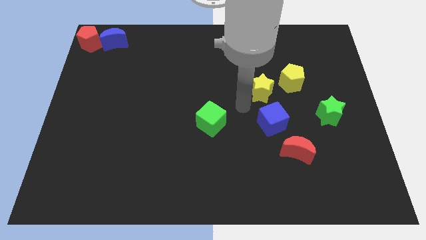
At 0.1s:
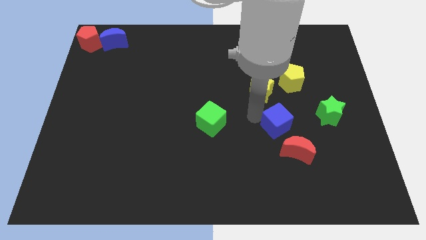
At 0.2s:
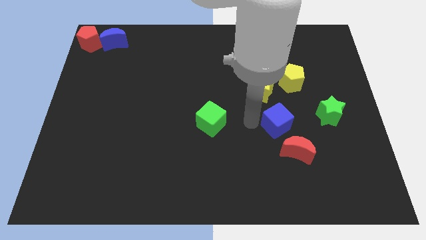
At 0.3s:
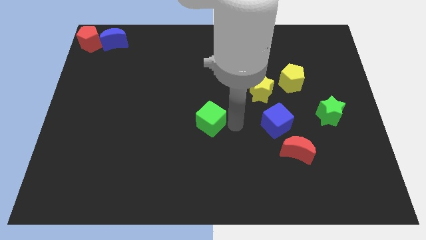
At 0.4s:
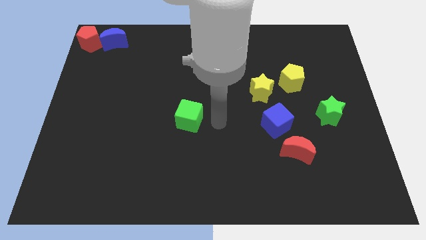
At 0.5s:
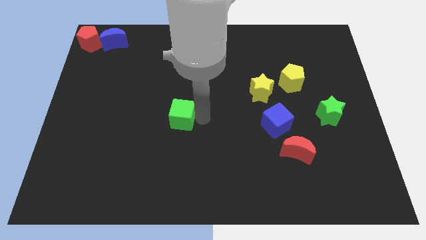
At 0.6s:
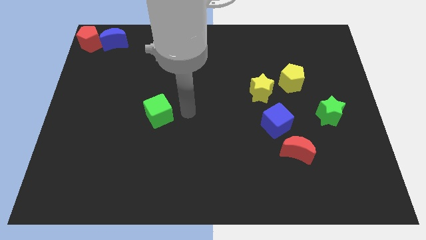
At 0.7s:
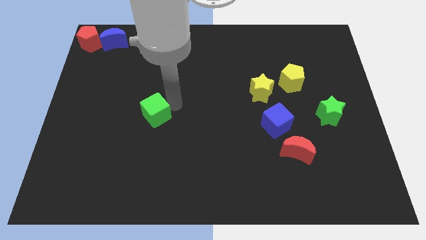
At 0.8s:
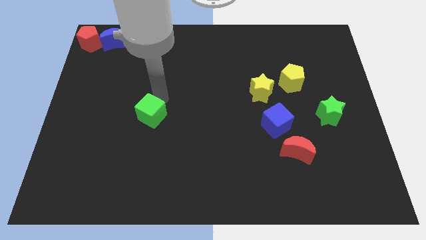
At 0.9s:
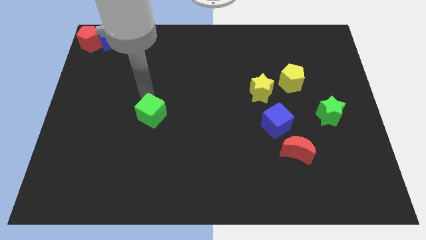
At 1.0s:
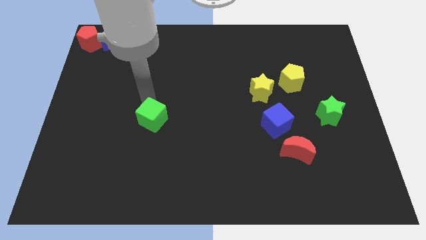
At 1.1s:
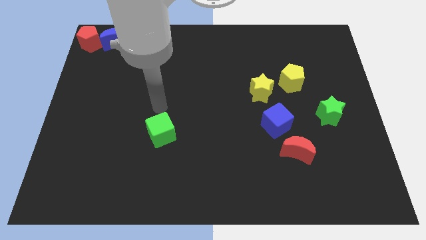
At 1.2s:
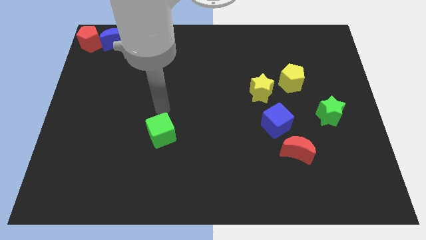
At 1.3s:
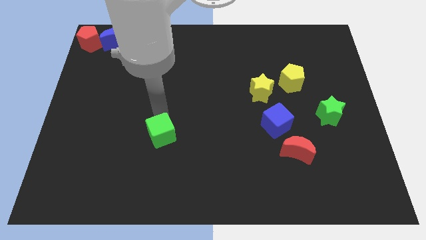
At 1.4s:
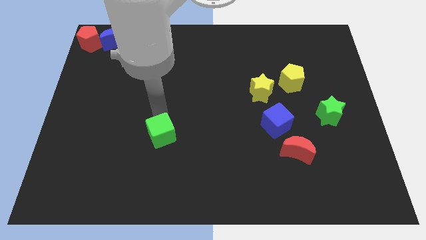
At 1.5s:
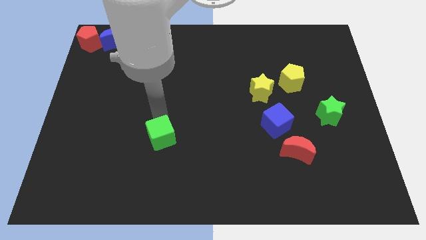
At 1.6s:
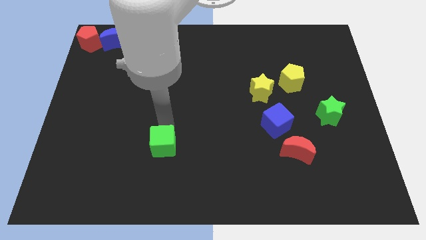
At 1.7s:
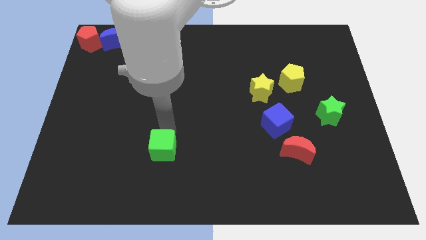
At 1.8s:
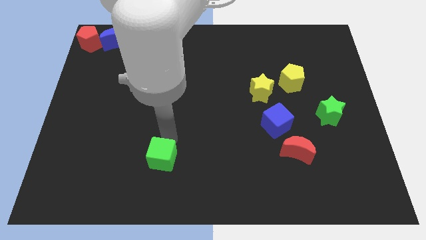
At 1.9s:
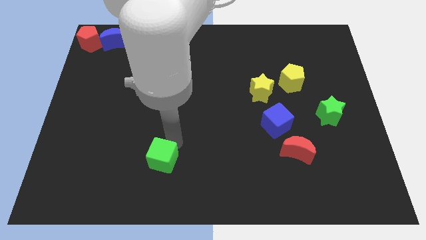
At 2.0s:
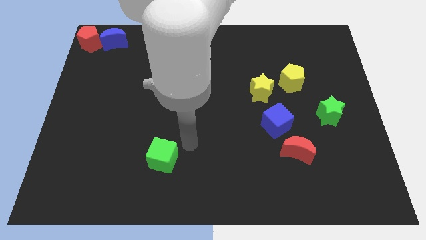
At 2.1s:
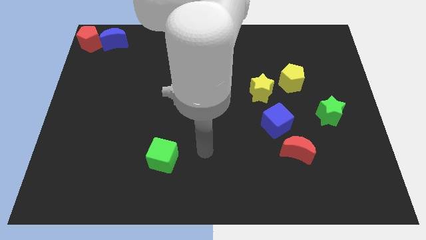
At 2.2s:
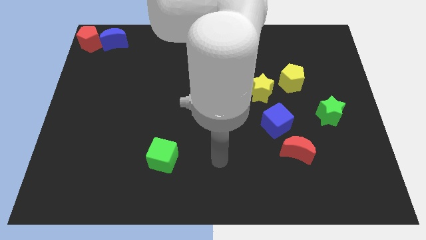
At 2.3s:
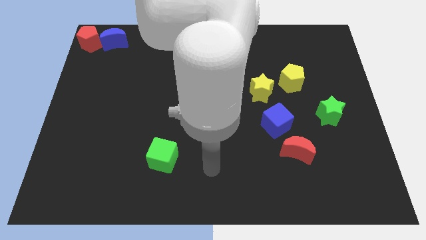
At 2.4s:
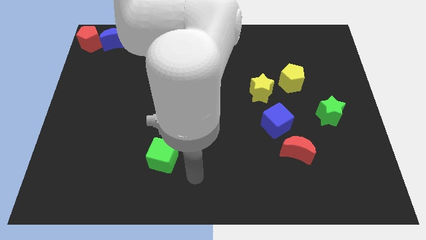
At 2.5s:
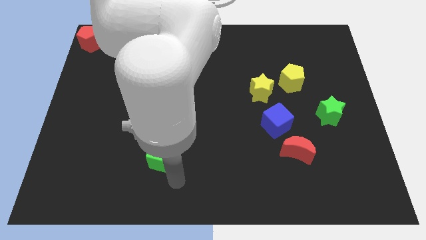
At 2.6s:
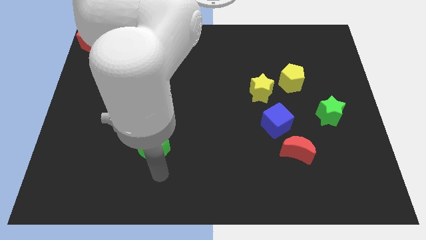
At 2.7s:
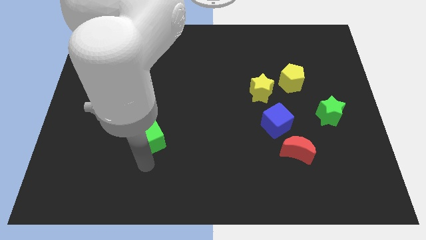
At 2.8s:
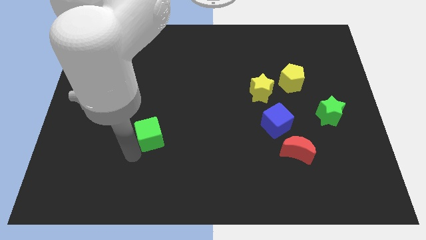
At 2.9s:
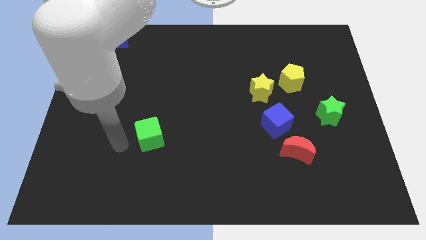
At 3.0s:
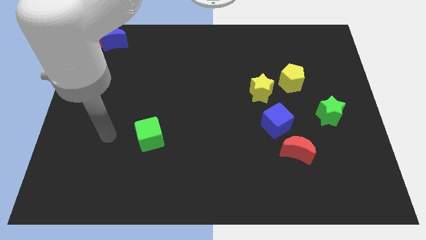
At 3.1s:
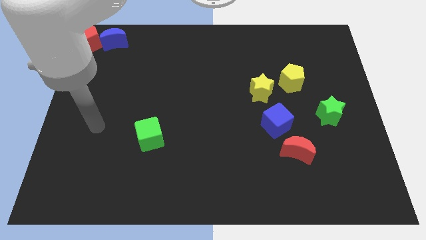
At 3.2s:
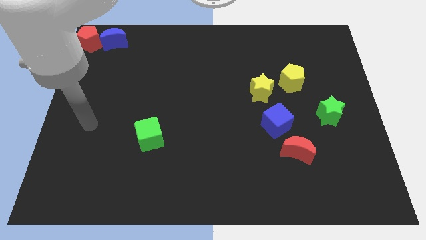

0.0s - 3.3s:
move the green cube slightly towards the bottom left

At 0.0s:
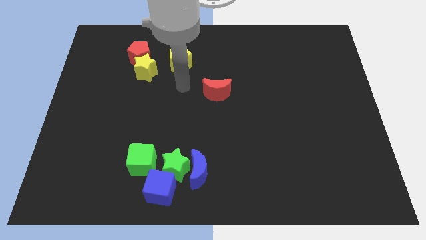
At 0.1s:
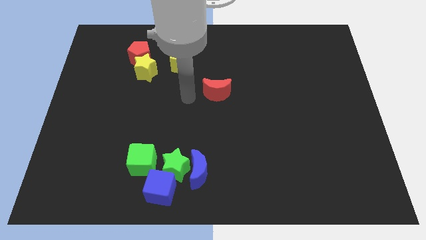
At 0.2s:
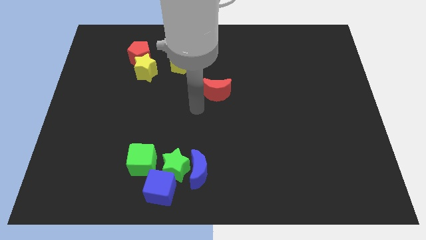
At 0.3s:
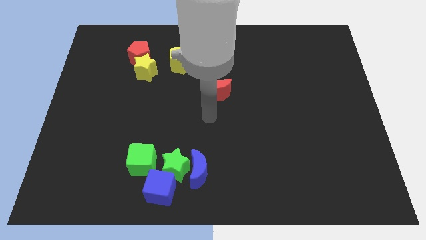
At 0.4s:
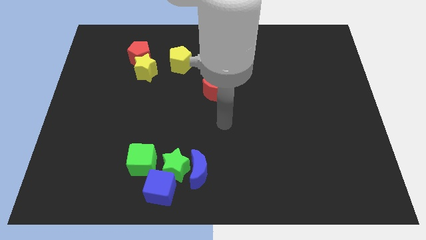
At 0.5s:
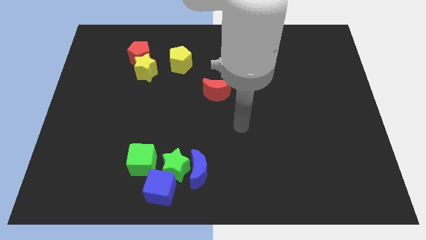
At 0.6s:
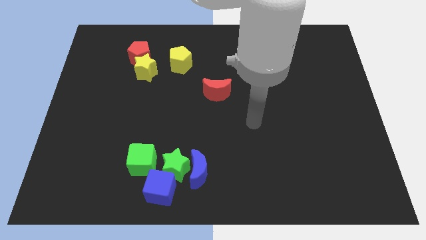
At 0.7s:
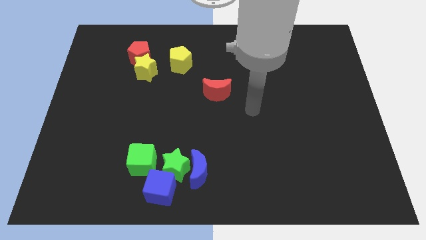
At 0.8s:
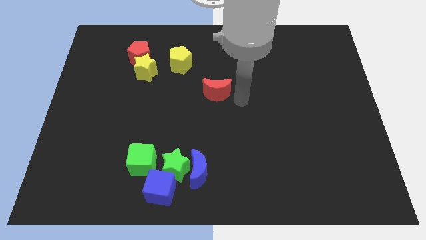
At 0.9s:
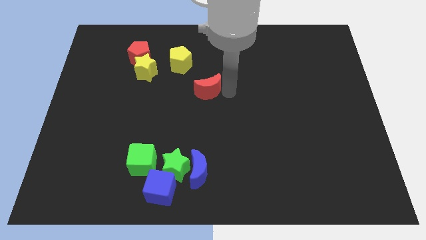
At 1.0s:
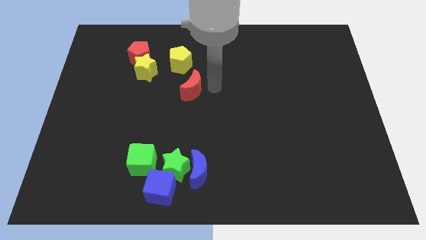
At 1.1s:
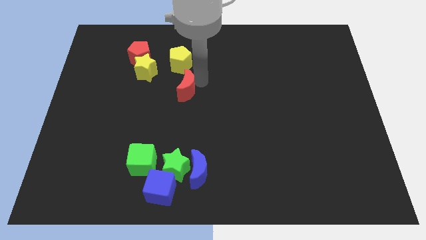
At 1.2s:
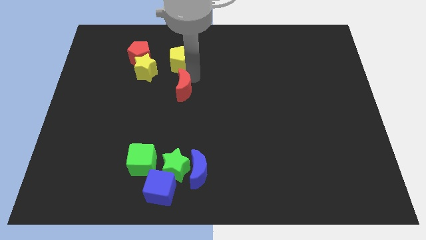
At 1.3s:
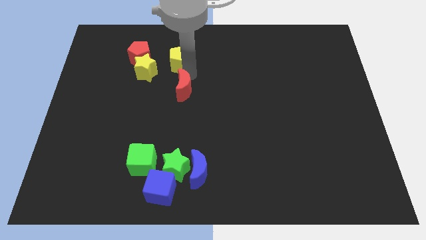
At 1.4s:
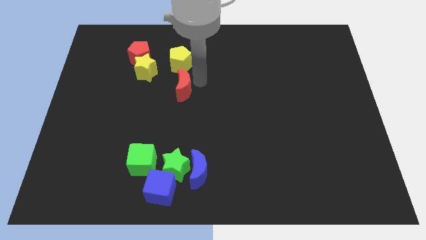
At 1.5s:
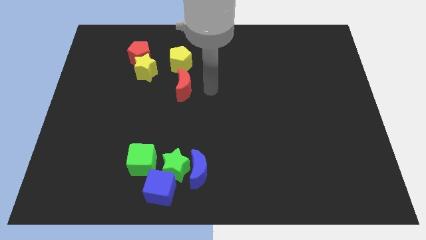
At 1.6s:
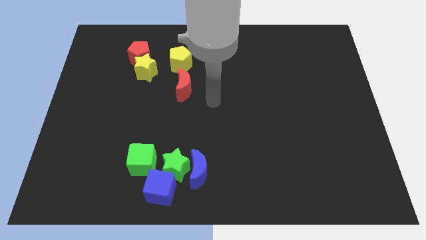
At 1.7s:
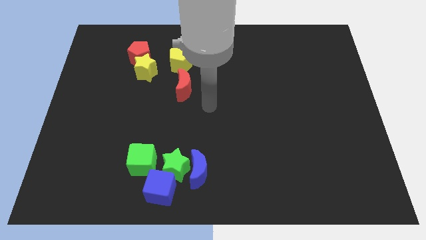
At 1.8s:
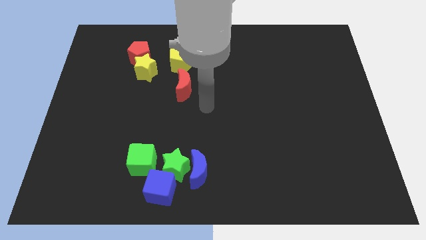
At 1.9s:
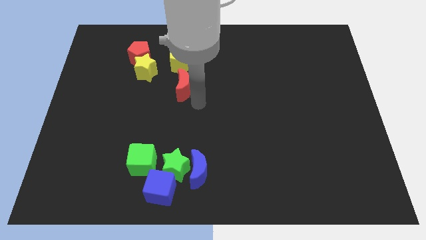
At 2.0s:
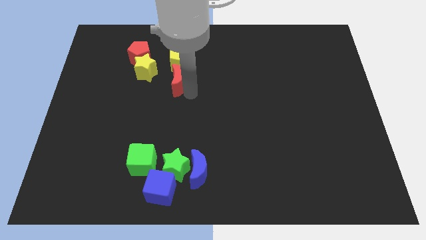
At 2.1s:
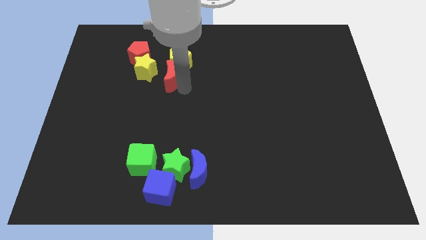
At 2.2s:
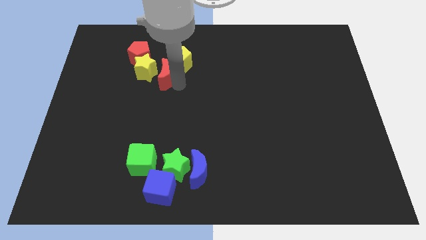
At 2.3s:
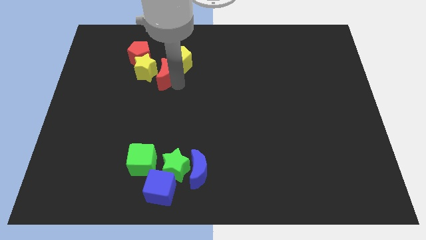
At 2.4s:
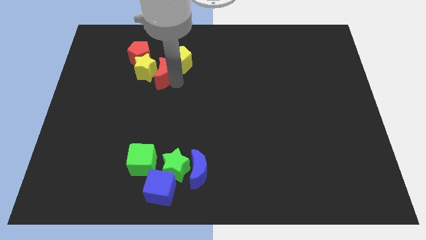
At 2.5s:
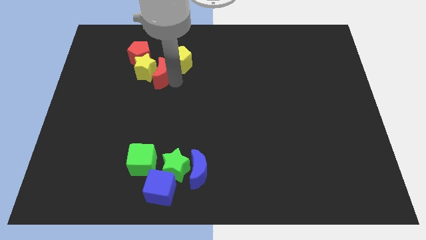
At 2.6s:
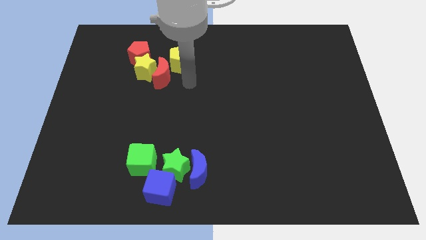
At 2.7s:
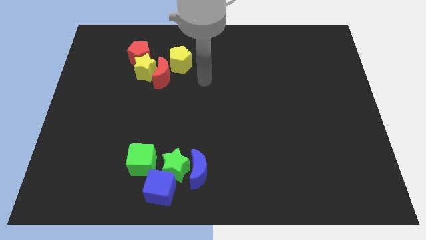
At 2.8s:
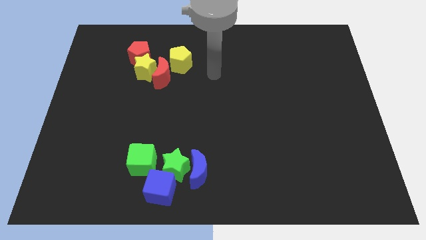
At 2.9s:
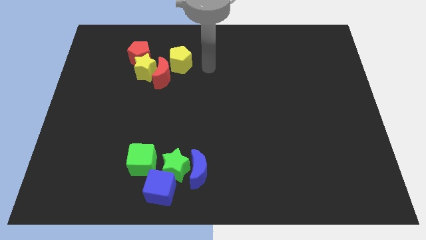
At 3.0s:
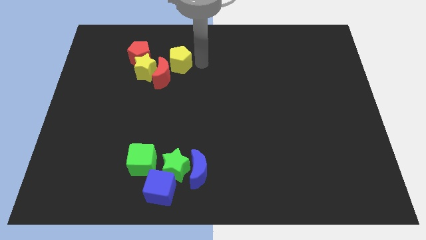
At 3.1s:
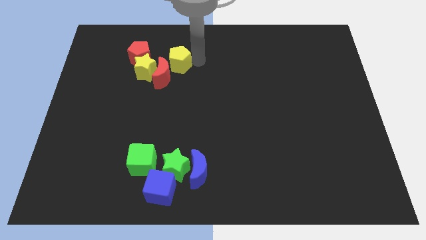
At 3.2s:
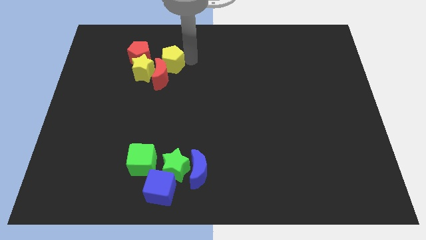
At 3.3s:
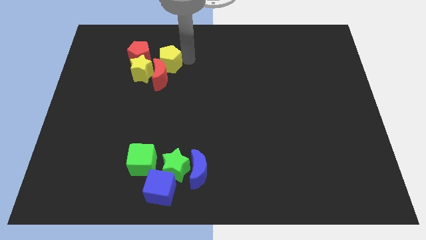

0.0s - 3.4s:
move the red crescent into the yellow star

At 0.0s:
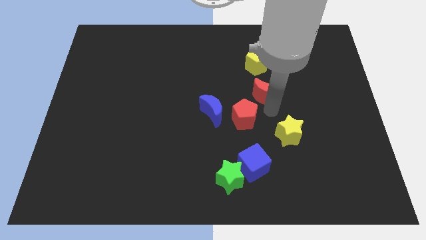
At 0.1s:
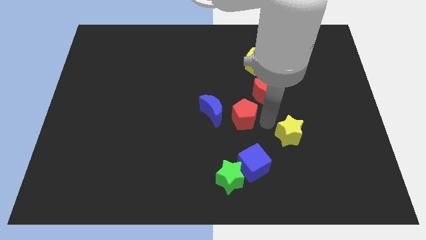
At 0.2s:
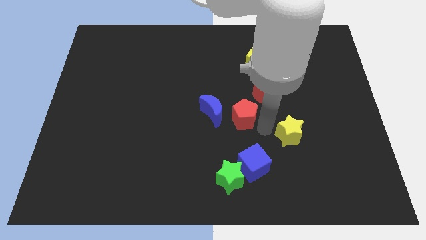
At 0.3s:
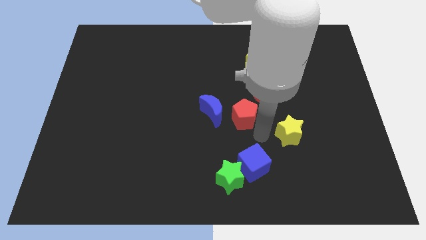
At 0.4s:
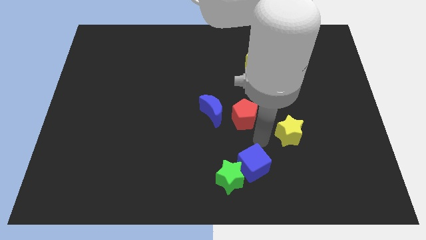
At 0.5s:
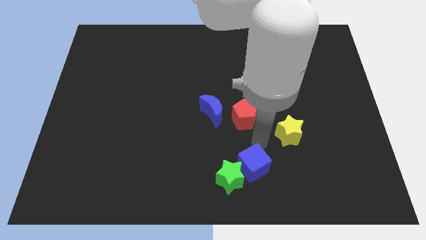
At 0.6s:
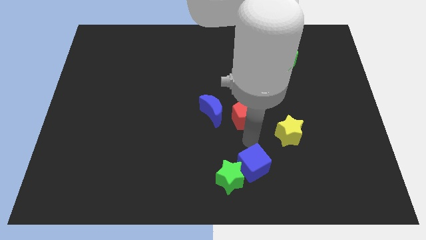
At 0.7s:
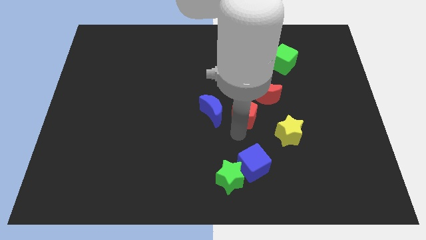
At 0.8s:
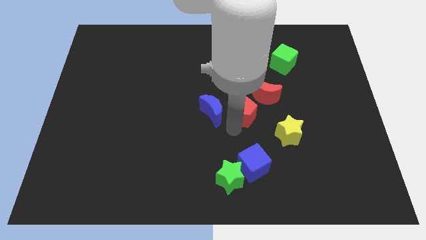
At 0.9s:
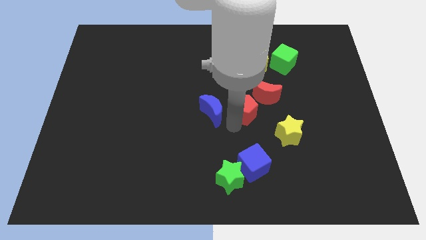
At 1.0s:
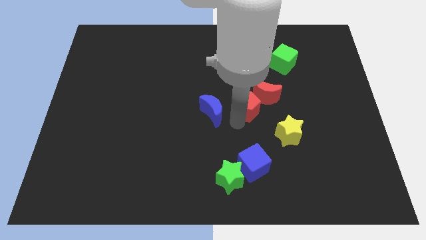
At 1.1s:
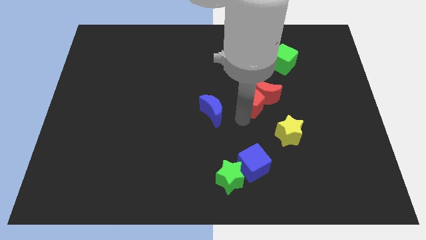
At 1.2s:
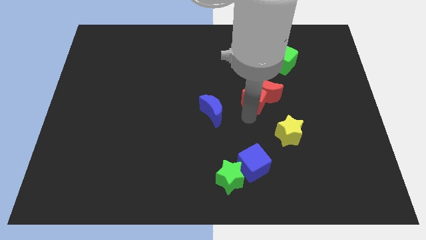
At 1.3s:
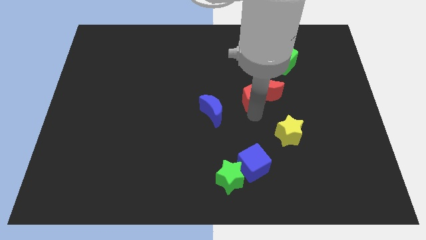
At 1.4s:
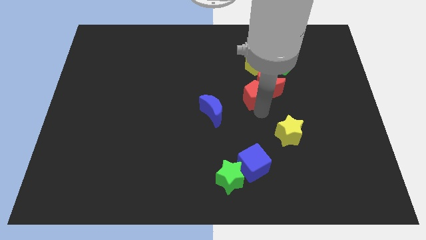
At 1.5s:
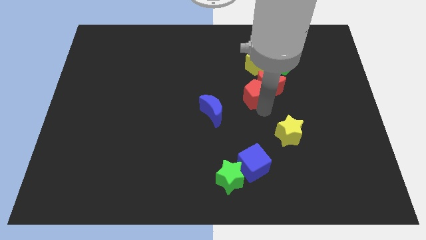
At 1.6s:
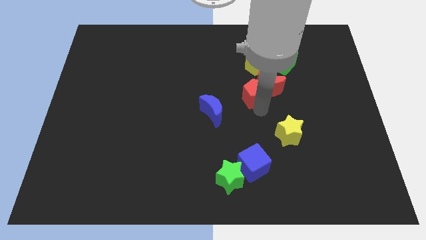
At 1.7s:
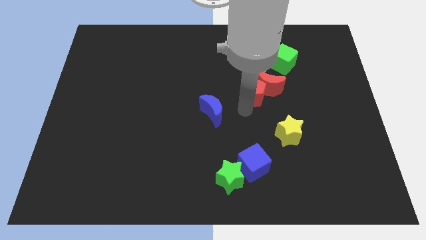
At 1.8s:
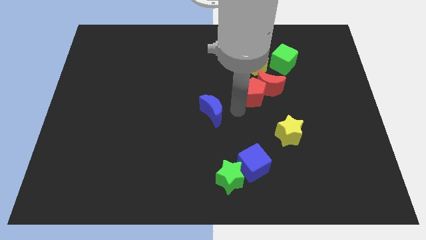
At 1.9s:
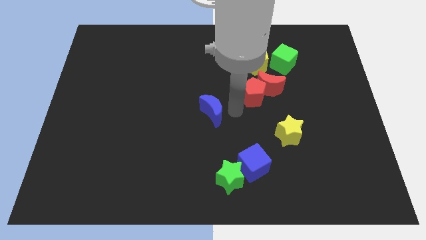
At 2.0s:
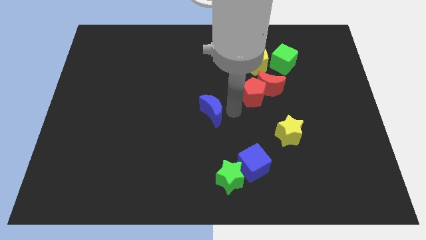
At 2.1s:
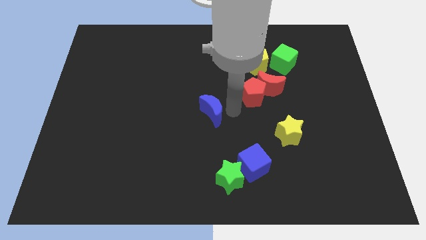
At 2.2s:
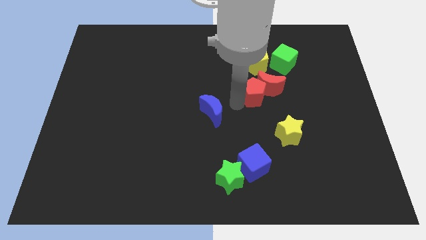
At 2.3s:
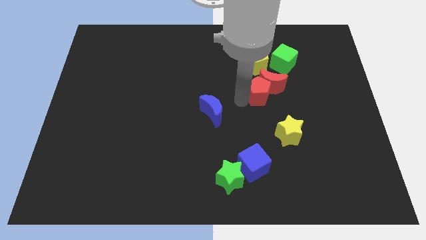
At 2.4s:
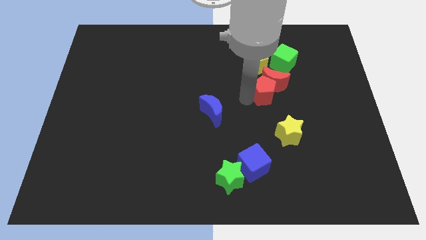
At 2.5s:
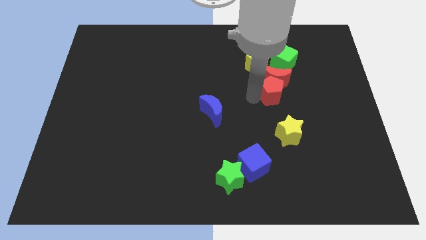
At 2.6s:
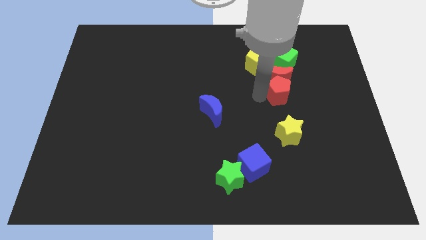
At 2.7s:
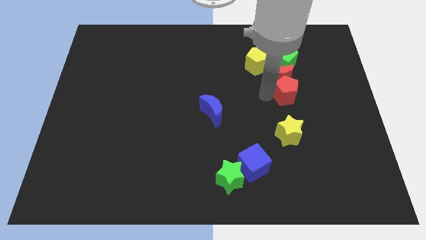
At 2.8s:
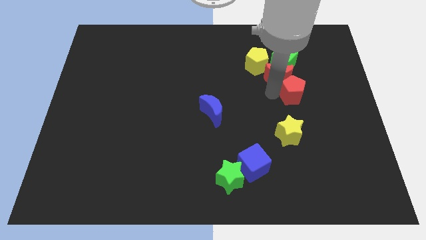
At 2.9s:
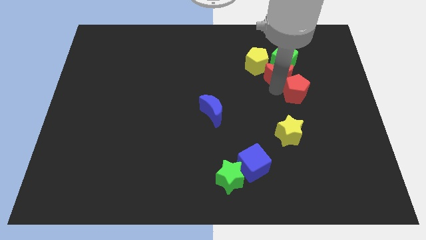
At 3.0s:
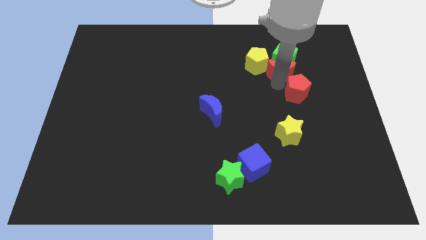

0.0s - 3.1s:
push the red pentagon into the red crescent
